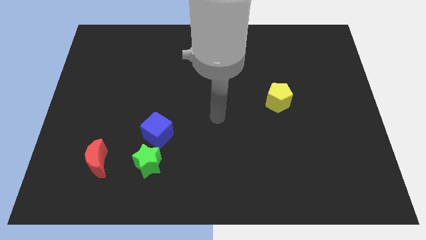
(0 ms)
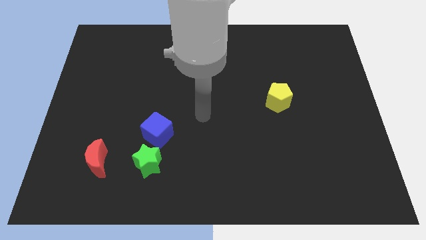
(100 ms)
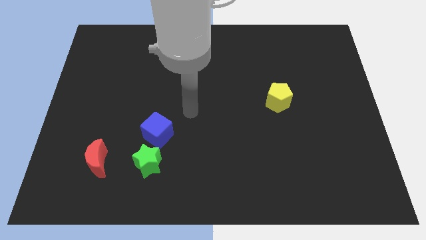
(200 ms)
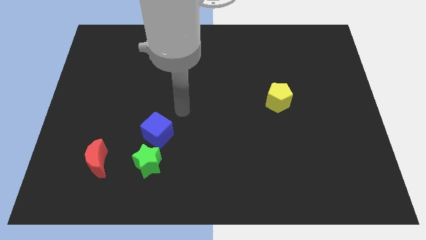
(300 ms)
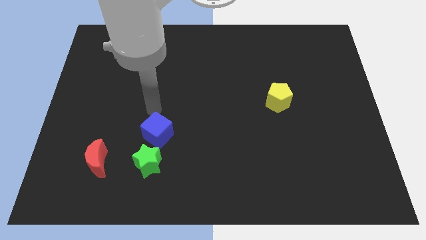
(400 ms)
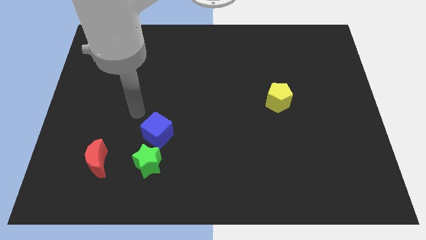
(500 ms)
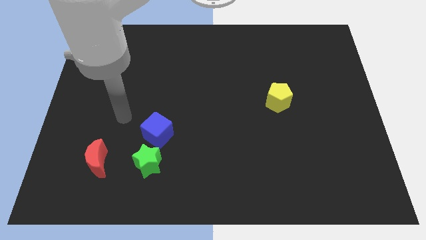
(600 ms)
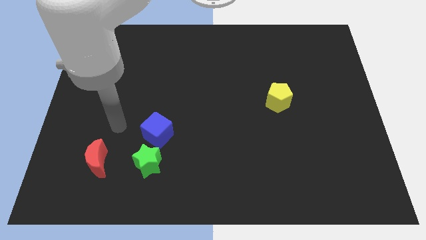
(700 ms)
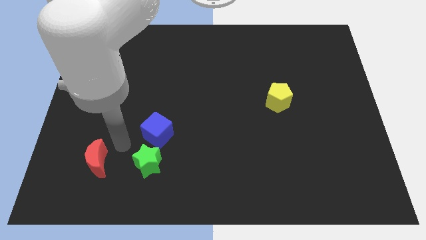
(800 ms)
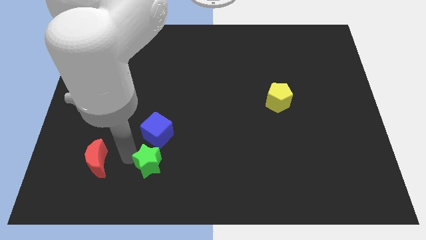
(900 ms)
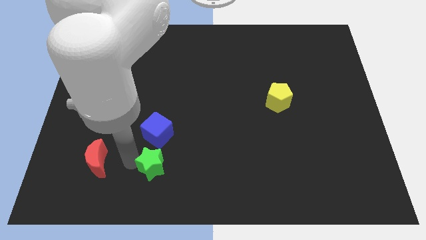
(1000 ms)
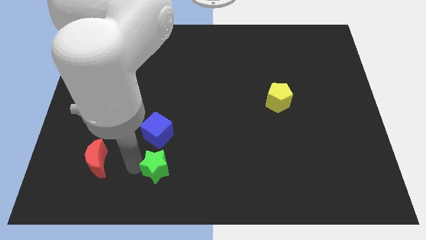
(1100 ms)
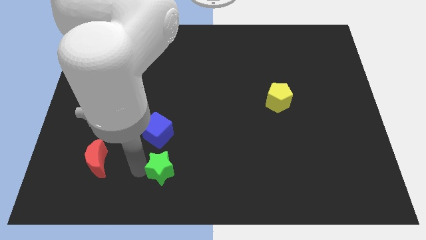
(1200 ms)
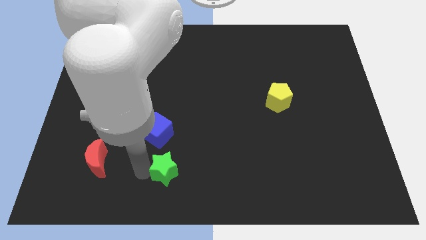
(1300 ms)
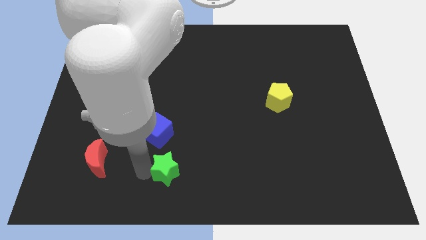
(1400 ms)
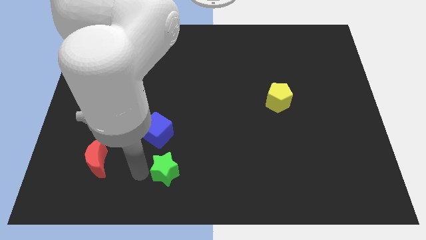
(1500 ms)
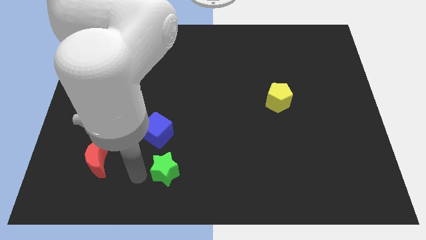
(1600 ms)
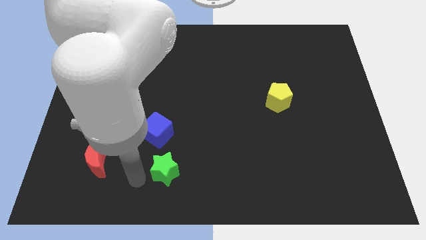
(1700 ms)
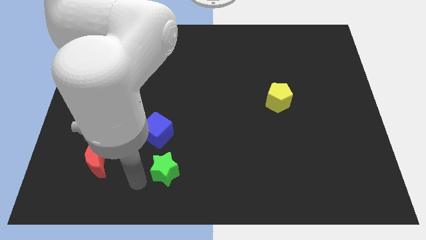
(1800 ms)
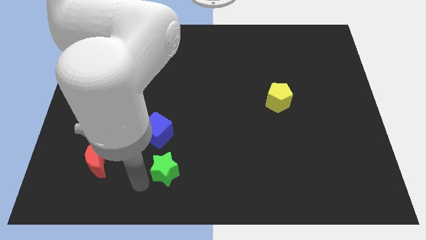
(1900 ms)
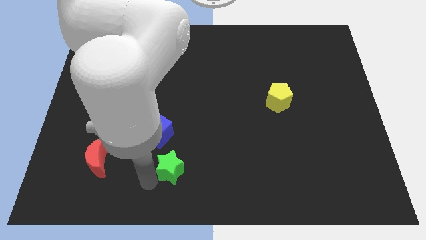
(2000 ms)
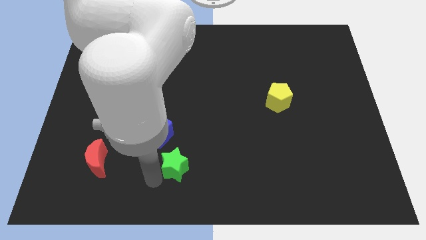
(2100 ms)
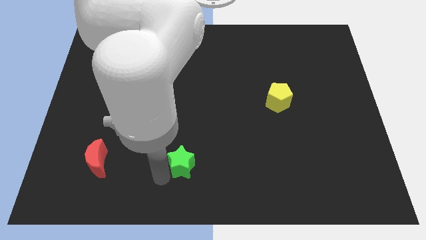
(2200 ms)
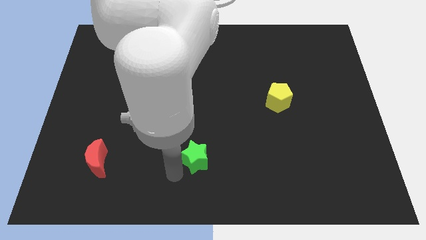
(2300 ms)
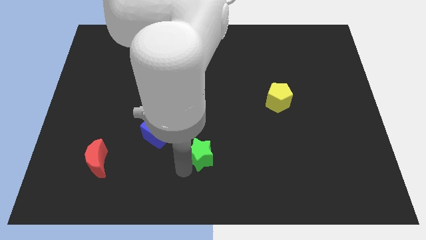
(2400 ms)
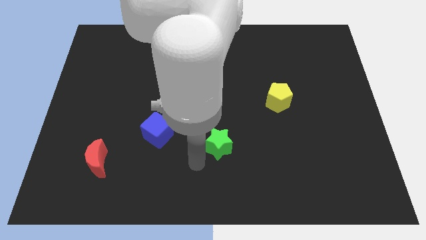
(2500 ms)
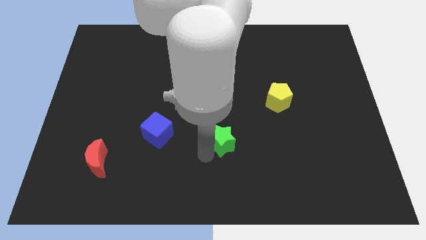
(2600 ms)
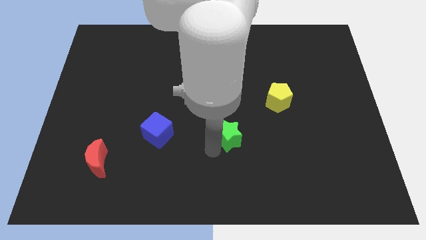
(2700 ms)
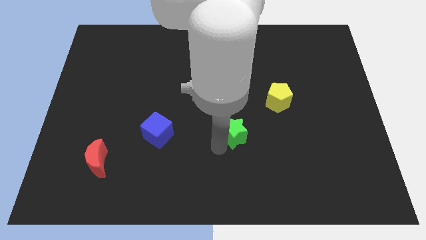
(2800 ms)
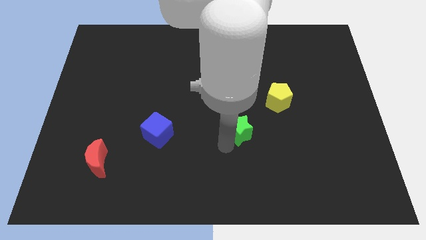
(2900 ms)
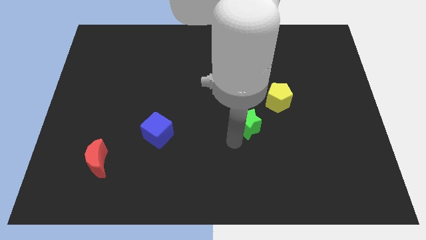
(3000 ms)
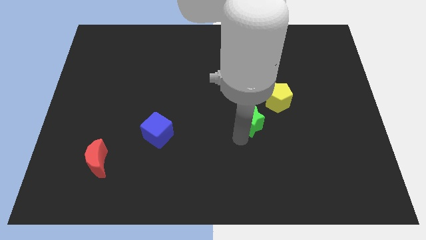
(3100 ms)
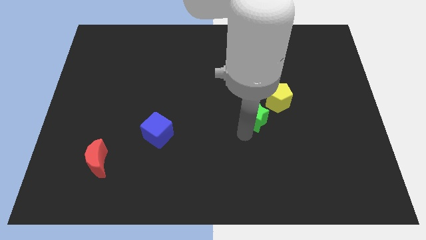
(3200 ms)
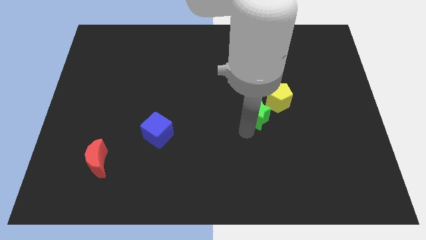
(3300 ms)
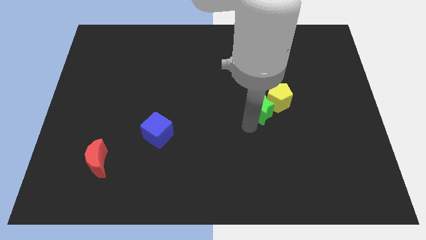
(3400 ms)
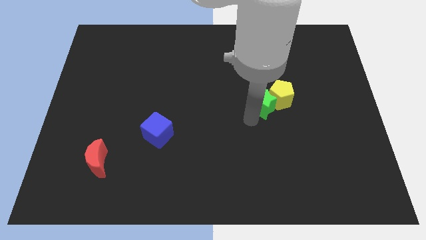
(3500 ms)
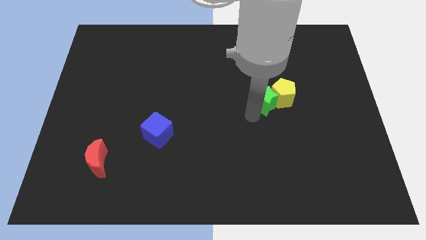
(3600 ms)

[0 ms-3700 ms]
move the green star towards the pentagon

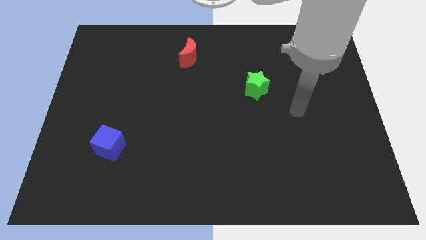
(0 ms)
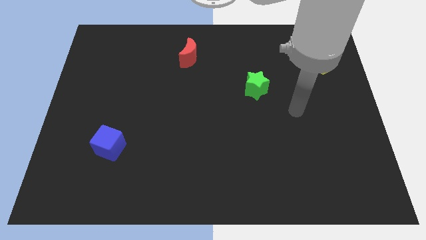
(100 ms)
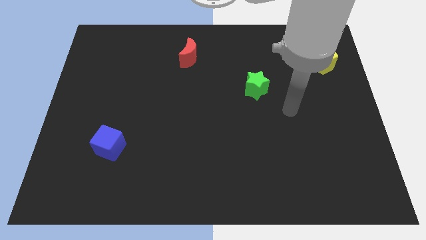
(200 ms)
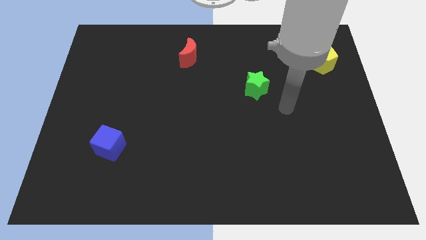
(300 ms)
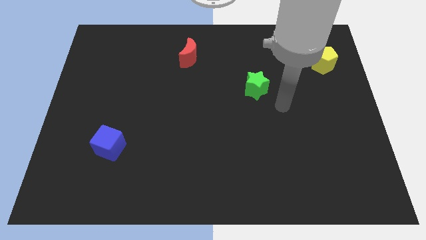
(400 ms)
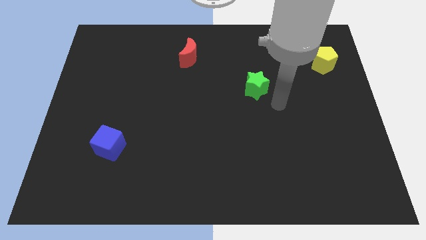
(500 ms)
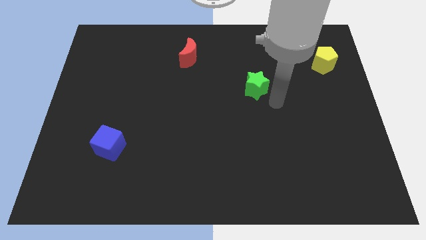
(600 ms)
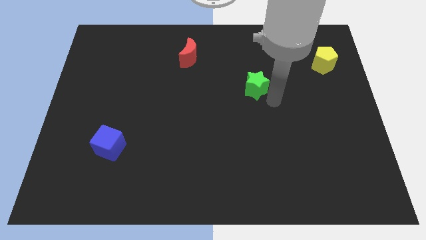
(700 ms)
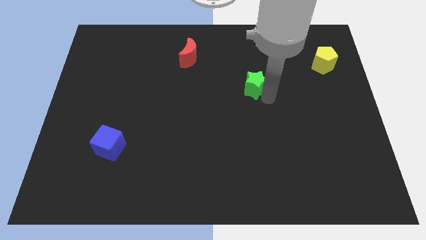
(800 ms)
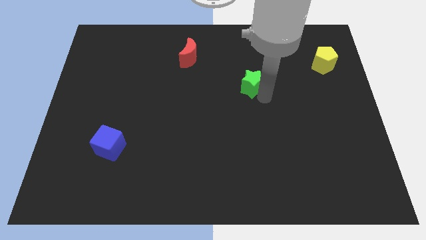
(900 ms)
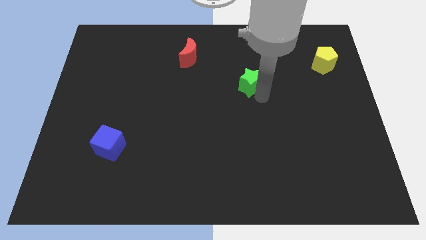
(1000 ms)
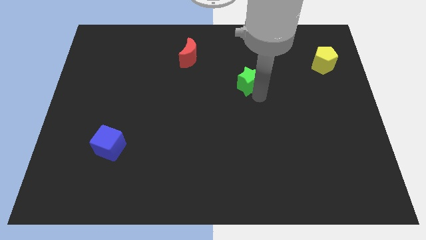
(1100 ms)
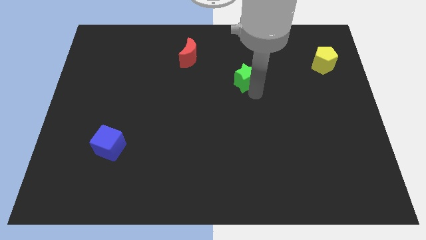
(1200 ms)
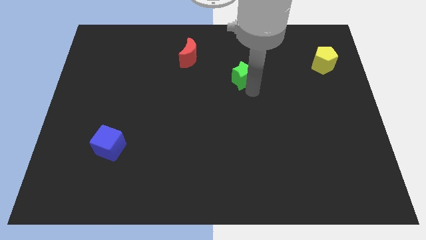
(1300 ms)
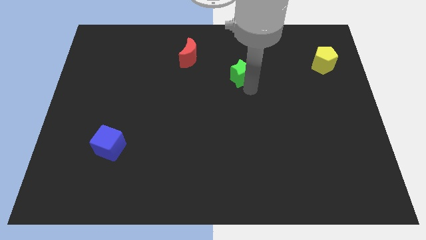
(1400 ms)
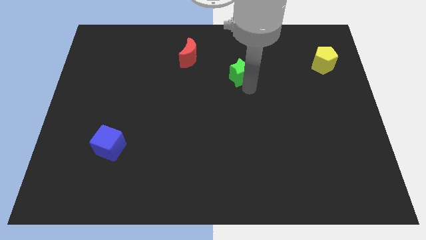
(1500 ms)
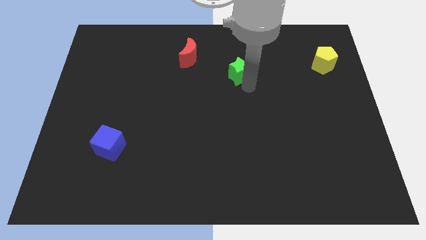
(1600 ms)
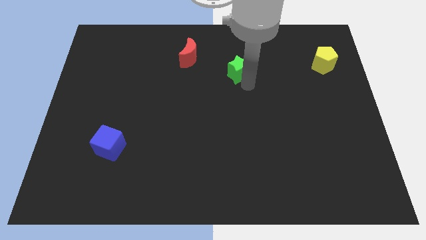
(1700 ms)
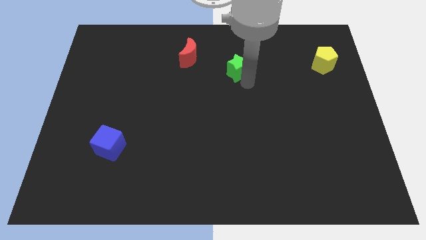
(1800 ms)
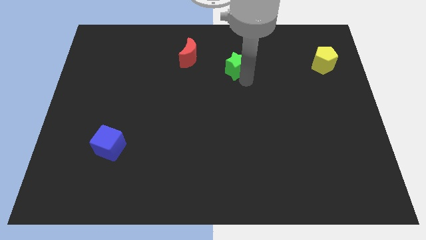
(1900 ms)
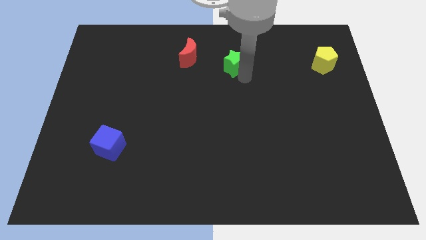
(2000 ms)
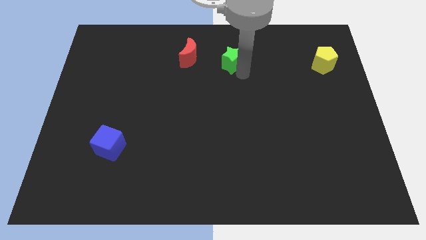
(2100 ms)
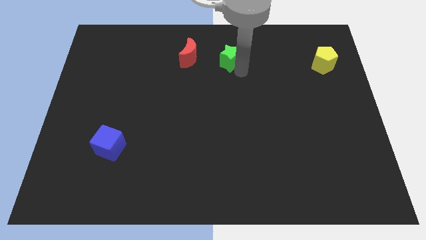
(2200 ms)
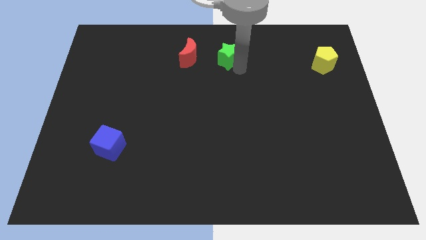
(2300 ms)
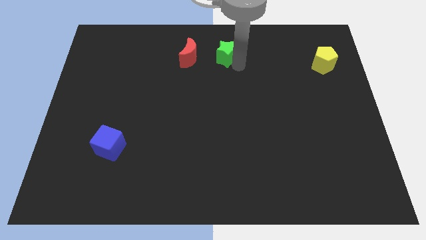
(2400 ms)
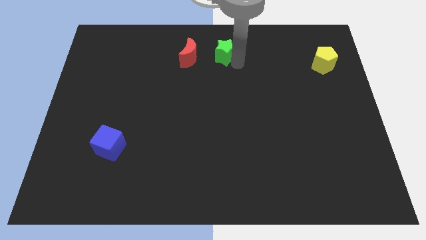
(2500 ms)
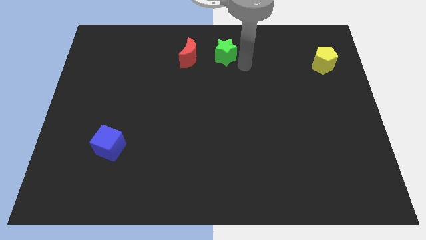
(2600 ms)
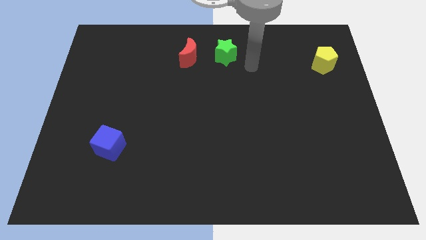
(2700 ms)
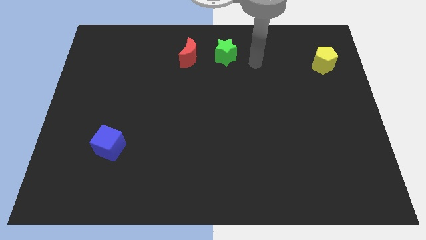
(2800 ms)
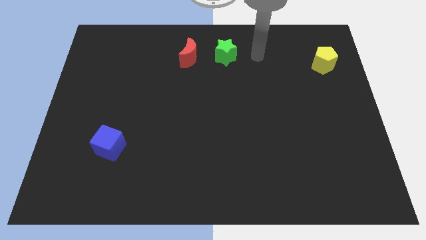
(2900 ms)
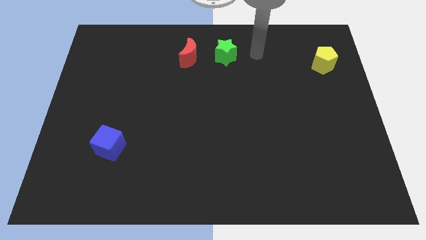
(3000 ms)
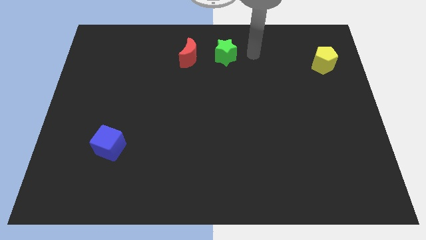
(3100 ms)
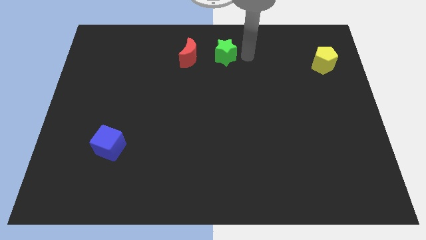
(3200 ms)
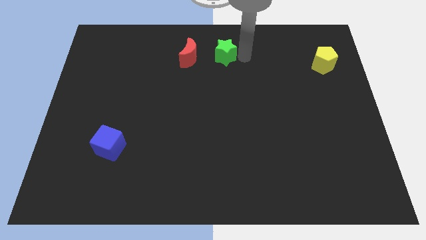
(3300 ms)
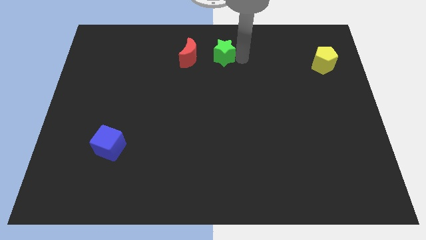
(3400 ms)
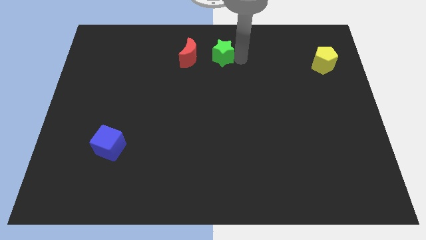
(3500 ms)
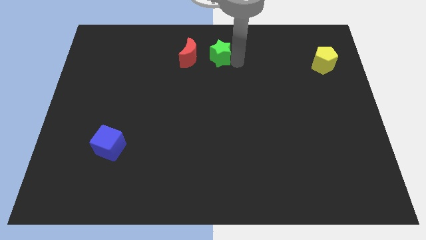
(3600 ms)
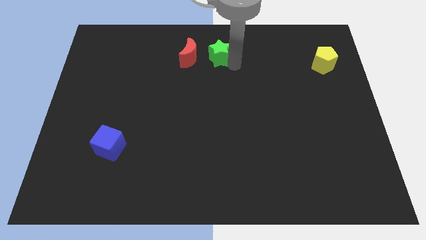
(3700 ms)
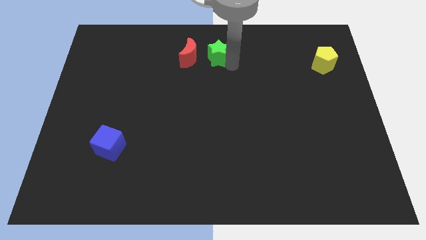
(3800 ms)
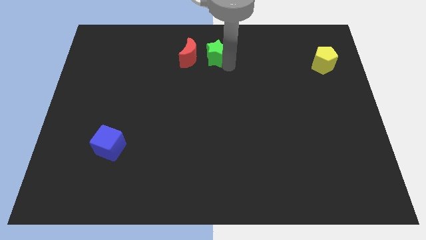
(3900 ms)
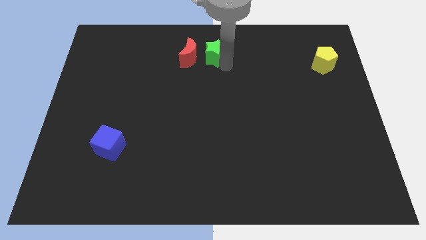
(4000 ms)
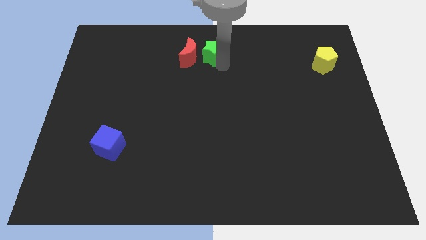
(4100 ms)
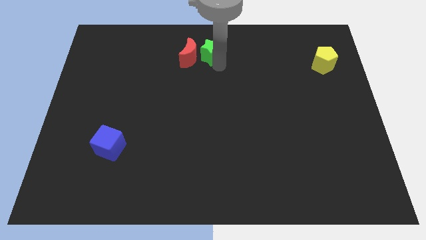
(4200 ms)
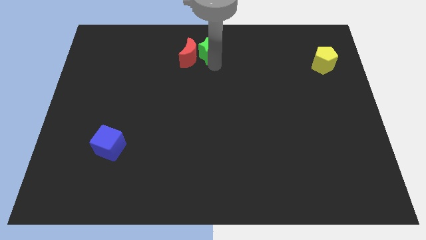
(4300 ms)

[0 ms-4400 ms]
slide the green block next to the red moon

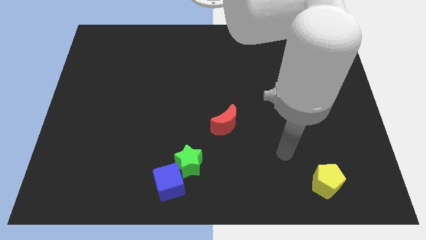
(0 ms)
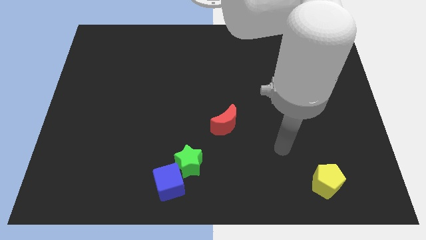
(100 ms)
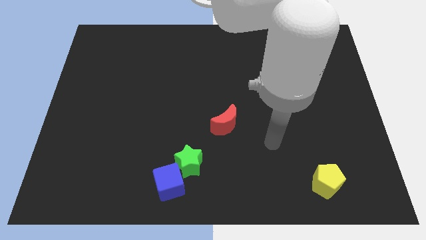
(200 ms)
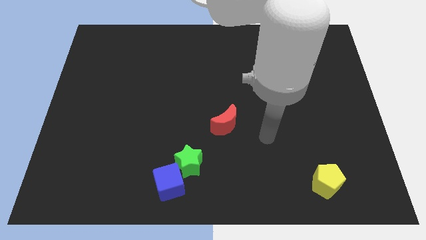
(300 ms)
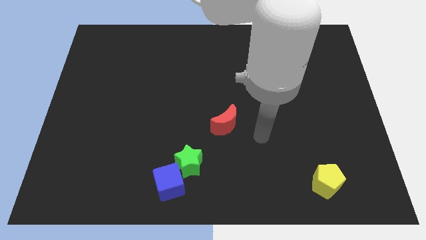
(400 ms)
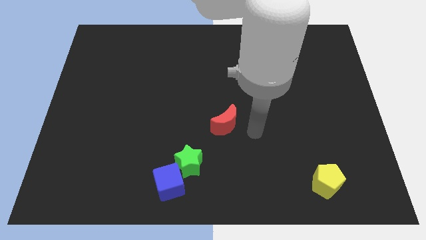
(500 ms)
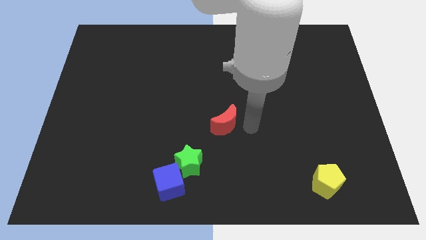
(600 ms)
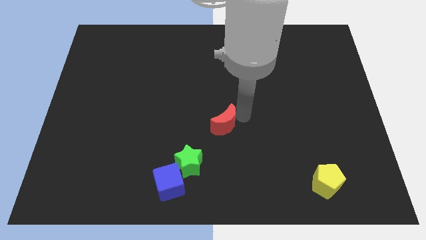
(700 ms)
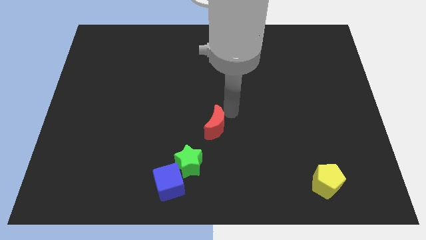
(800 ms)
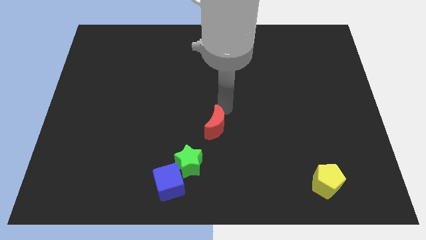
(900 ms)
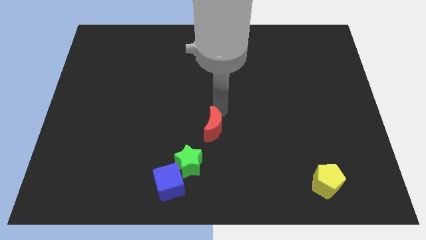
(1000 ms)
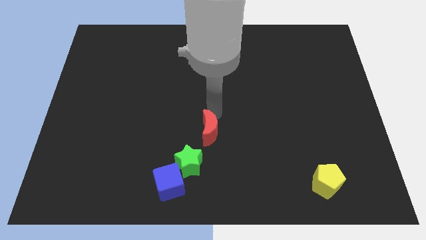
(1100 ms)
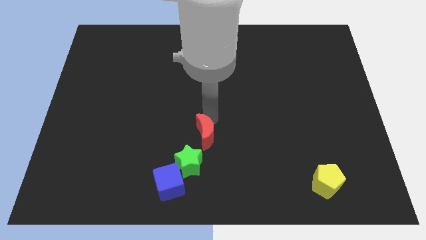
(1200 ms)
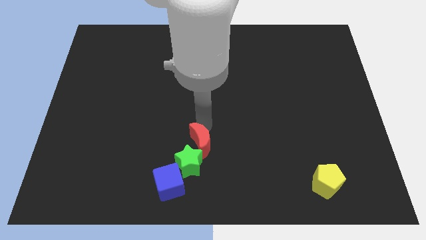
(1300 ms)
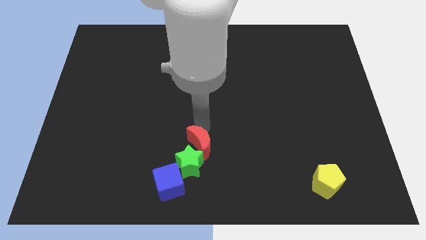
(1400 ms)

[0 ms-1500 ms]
slide the red block towards the green block
